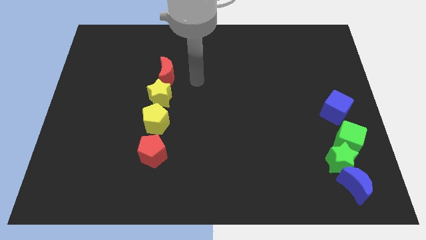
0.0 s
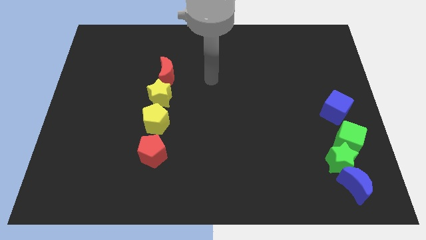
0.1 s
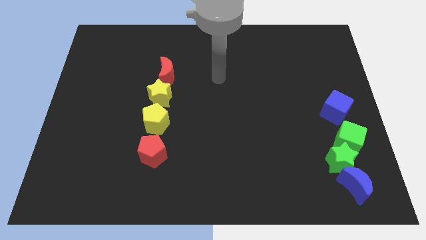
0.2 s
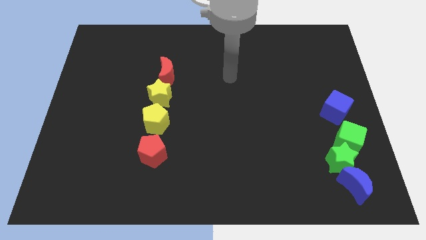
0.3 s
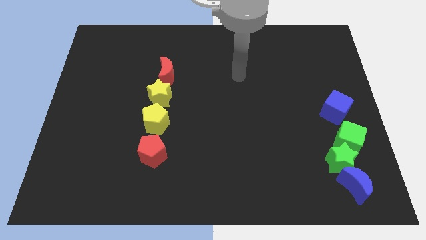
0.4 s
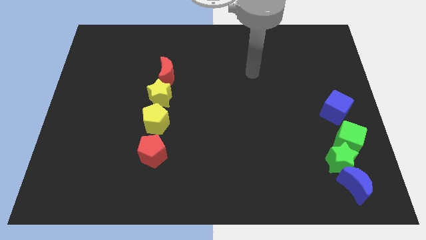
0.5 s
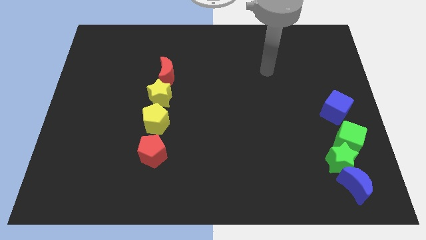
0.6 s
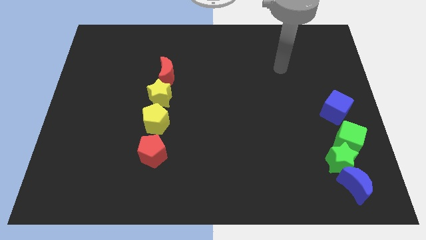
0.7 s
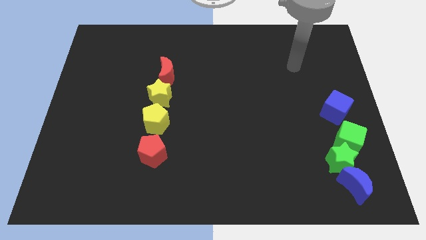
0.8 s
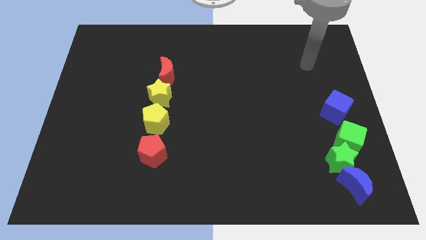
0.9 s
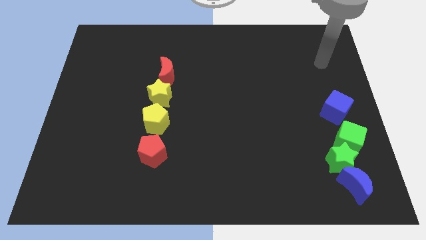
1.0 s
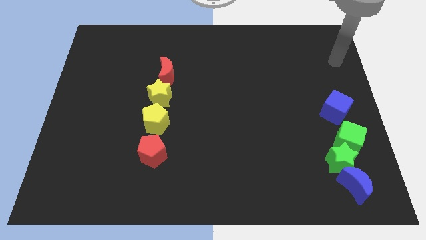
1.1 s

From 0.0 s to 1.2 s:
move your arm towards the right side of the board

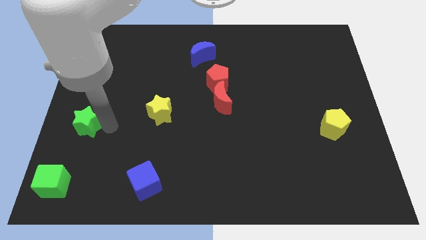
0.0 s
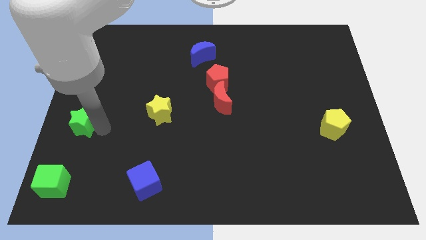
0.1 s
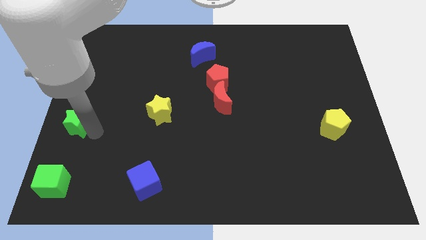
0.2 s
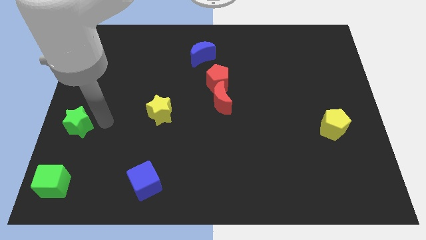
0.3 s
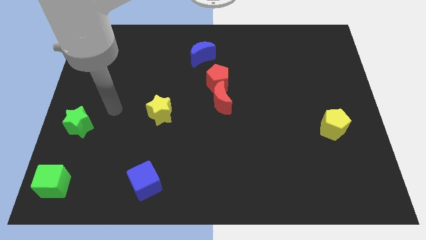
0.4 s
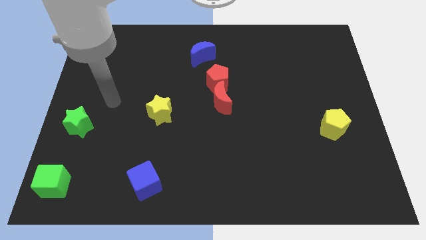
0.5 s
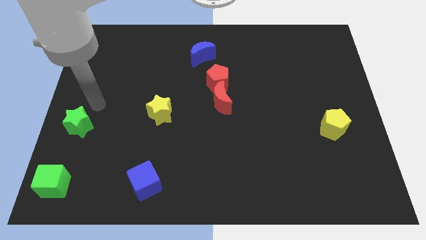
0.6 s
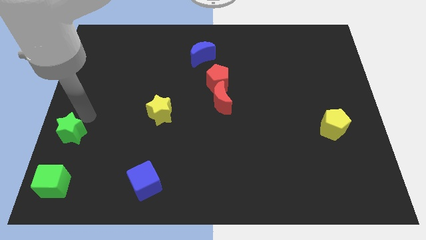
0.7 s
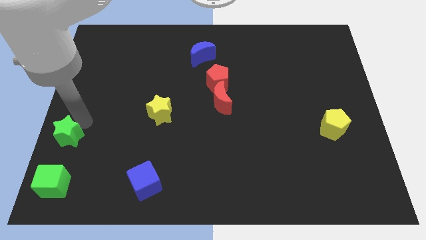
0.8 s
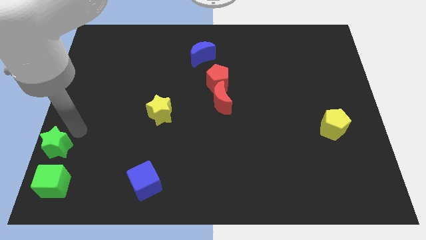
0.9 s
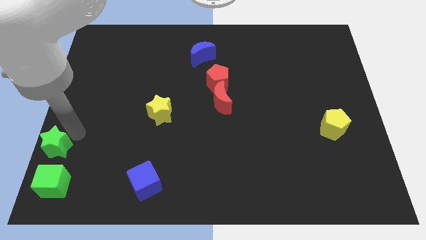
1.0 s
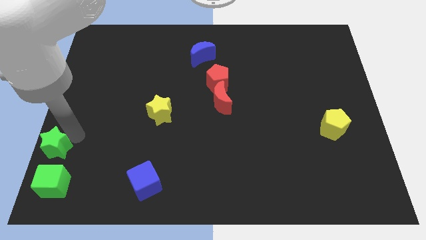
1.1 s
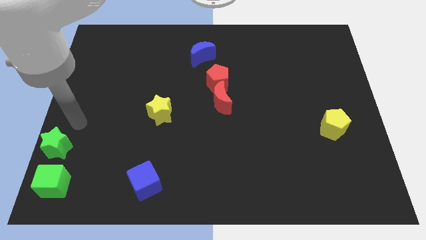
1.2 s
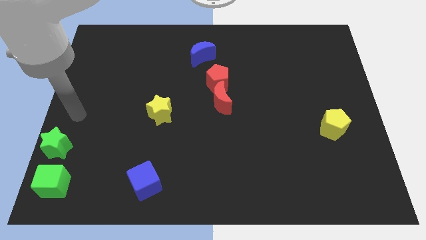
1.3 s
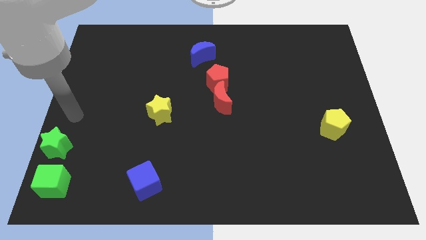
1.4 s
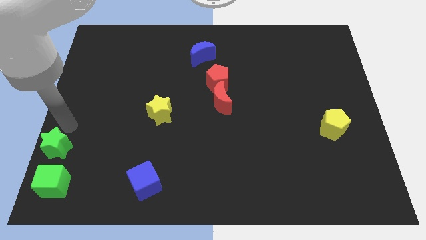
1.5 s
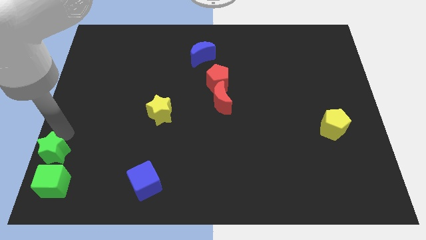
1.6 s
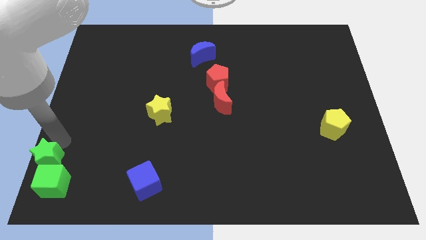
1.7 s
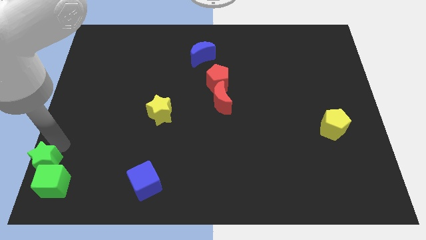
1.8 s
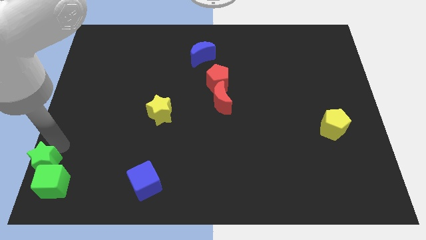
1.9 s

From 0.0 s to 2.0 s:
place the green star above the green cube

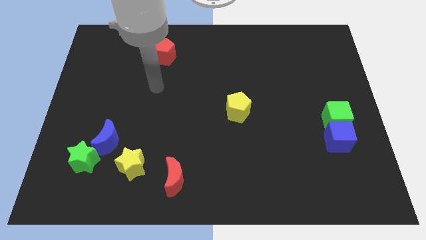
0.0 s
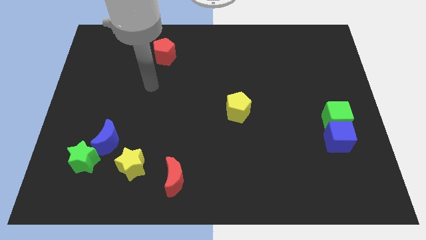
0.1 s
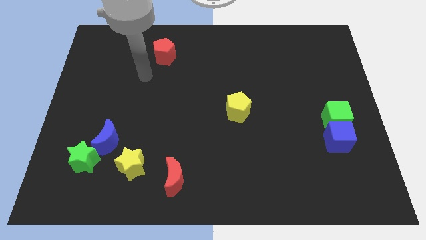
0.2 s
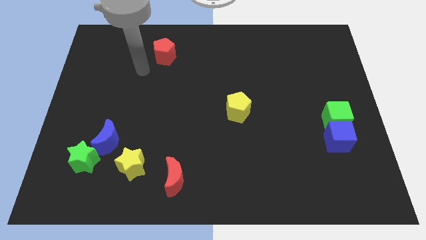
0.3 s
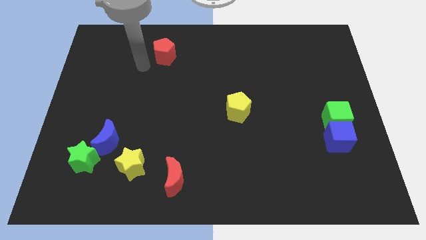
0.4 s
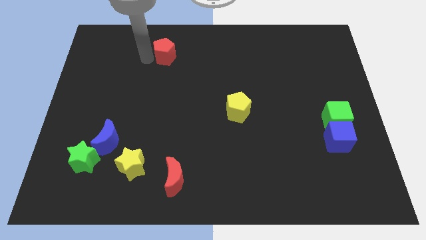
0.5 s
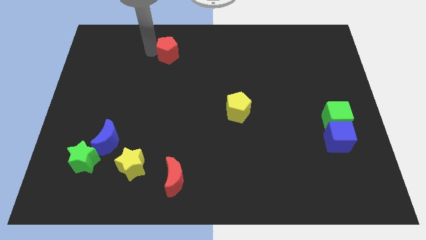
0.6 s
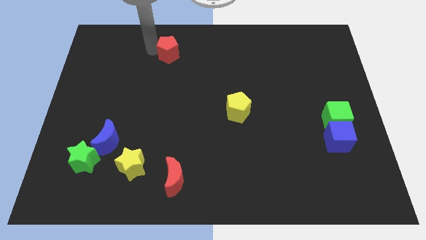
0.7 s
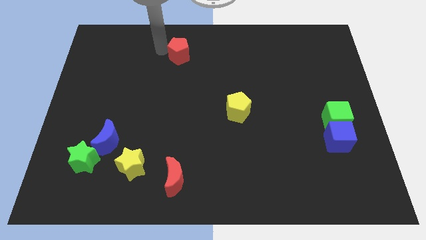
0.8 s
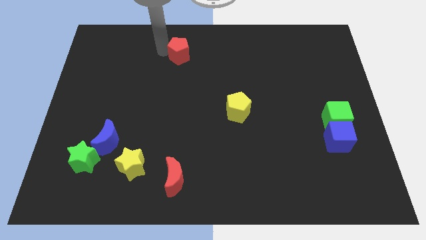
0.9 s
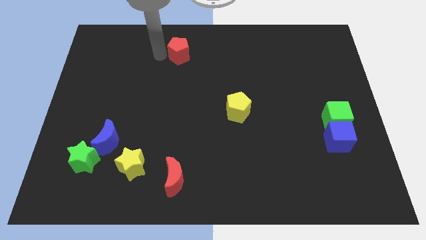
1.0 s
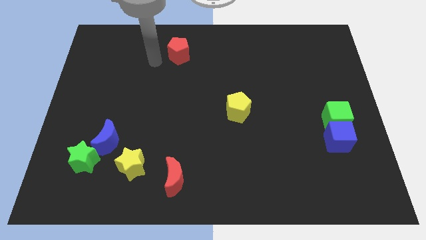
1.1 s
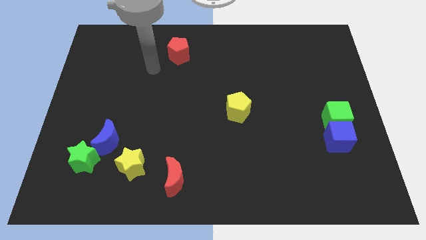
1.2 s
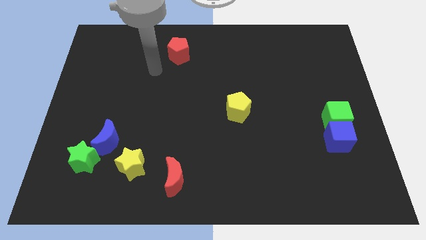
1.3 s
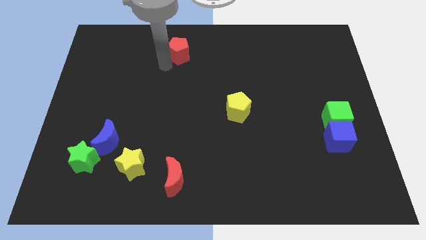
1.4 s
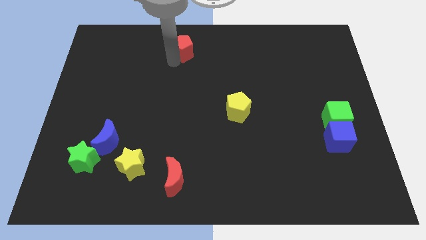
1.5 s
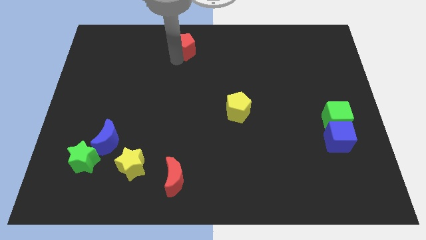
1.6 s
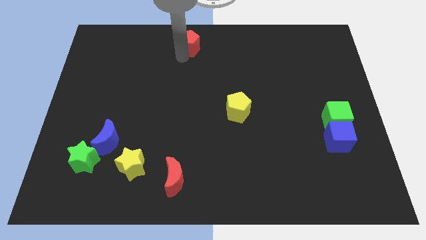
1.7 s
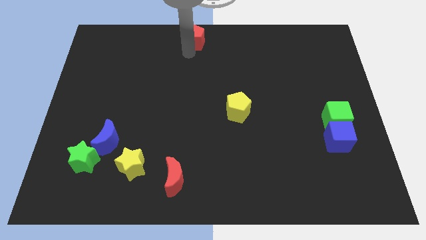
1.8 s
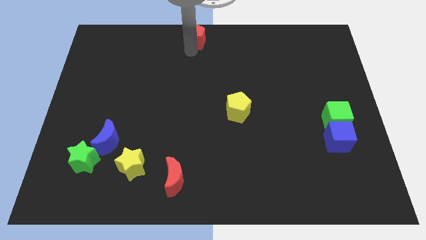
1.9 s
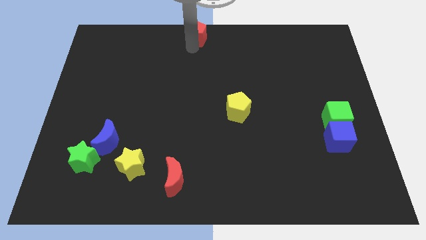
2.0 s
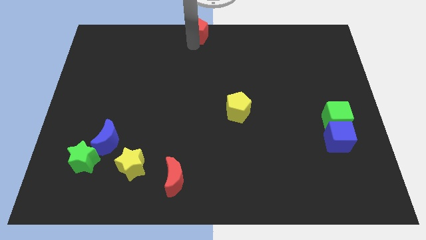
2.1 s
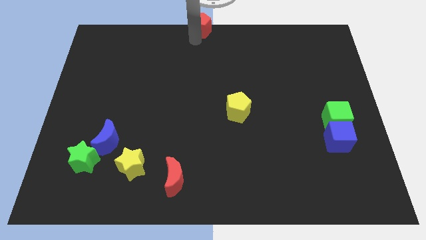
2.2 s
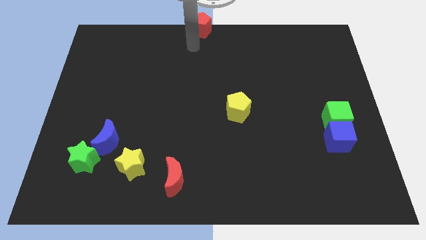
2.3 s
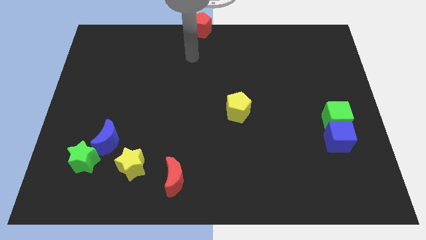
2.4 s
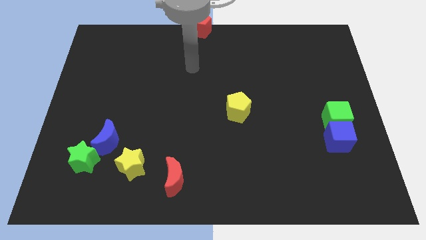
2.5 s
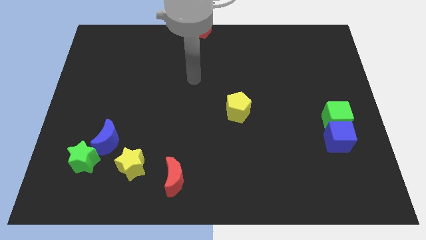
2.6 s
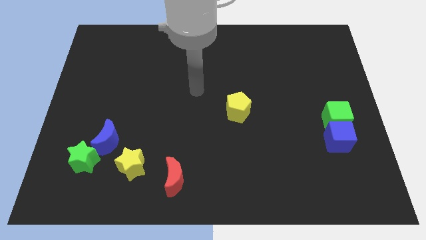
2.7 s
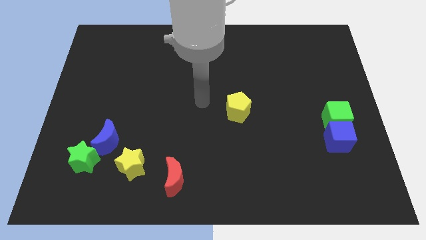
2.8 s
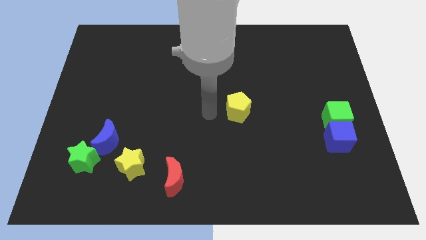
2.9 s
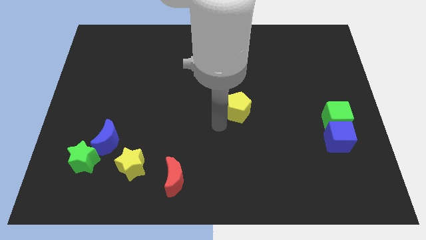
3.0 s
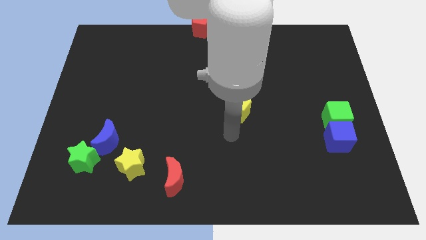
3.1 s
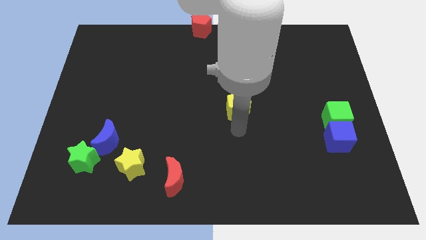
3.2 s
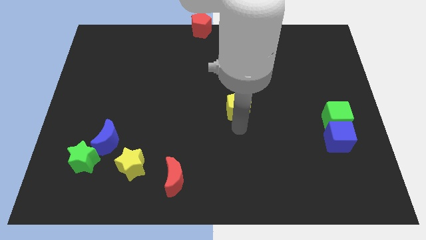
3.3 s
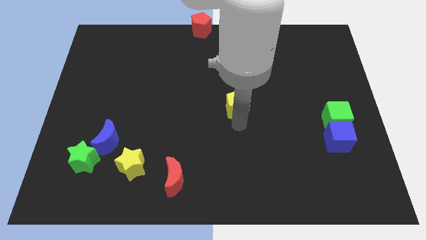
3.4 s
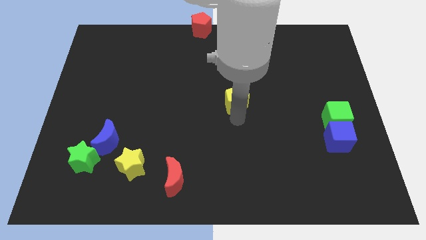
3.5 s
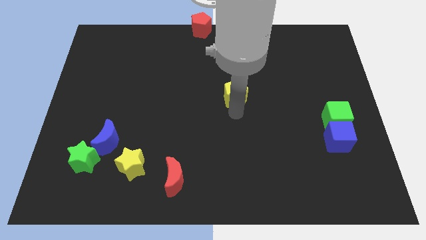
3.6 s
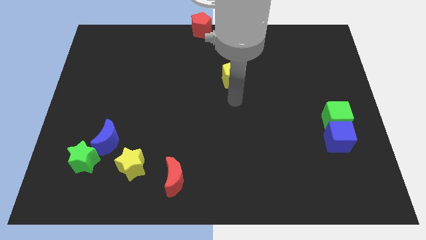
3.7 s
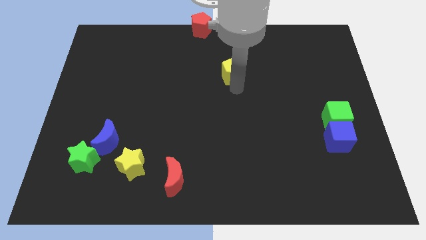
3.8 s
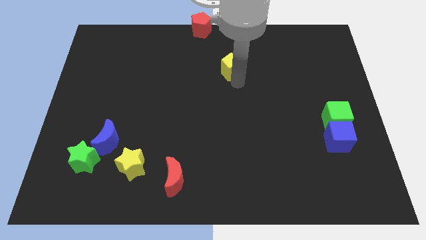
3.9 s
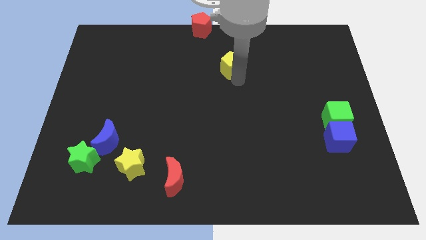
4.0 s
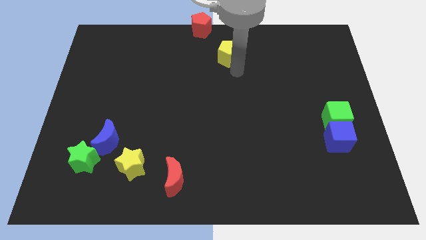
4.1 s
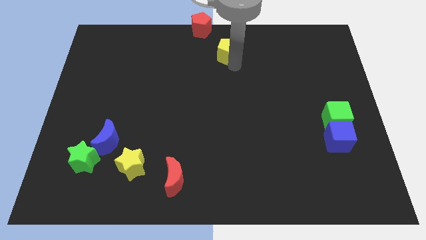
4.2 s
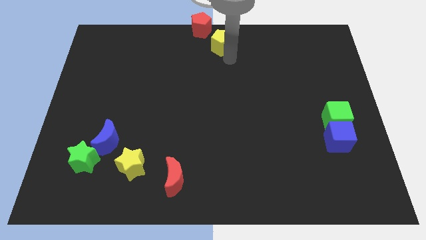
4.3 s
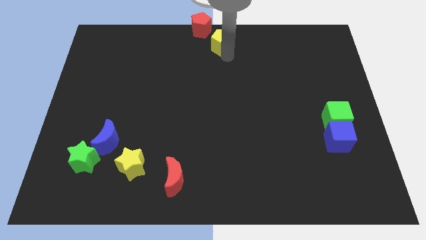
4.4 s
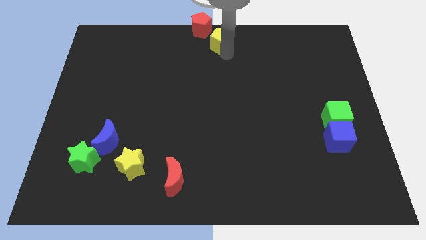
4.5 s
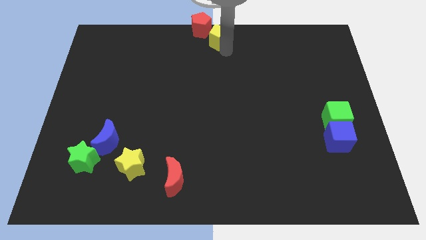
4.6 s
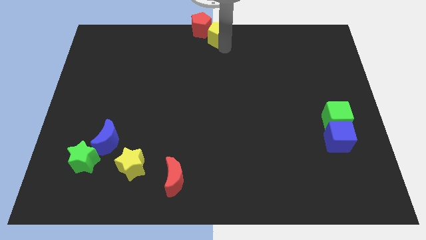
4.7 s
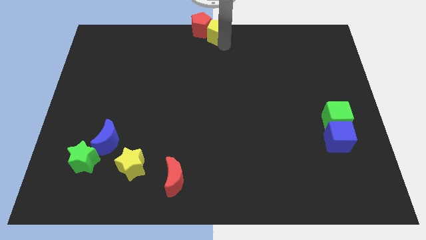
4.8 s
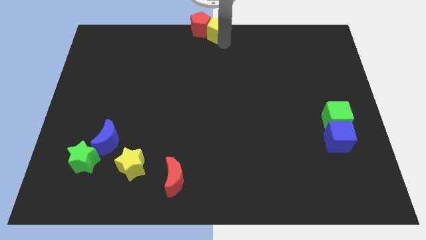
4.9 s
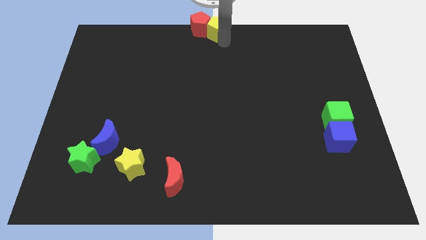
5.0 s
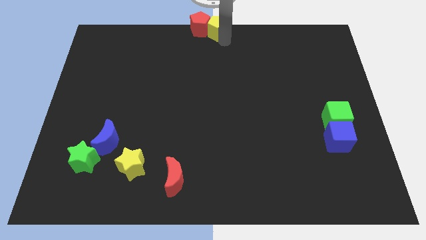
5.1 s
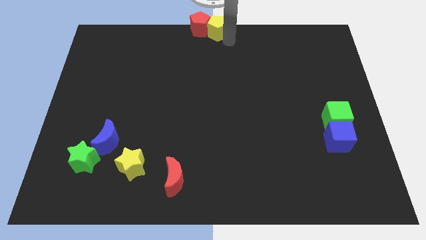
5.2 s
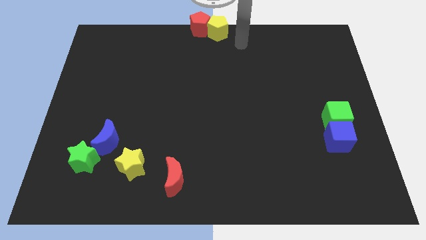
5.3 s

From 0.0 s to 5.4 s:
place the red and yellow pentagons at the top center of the board

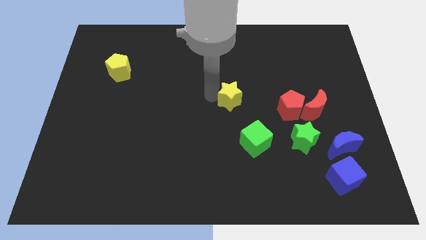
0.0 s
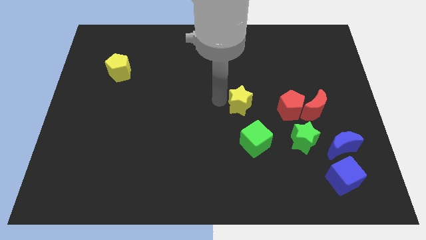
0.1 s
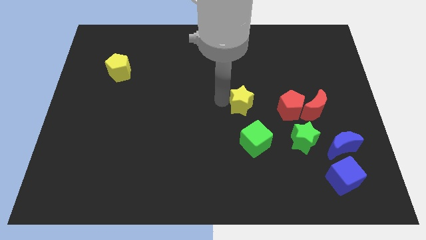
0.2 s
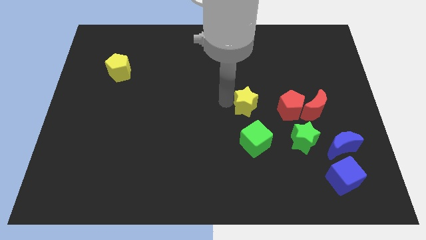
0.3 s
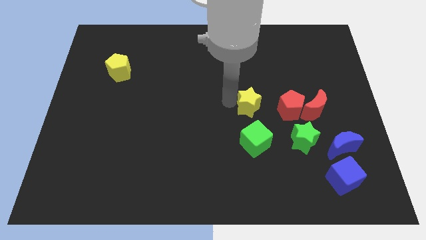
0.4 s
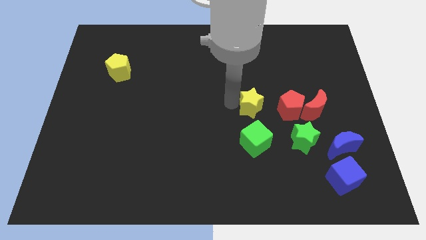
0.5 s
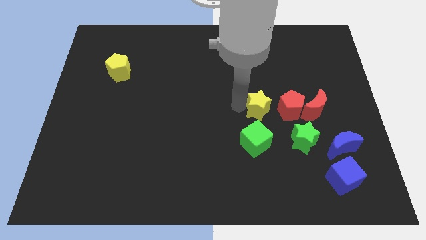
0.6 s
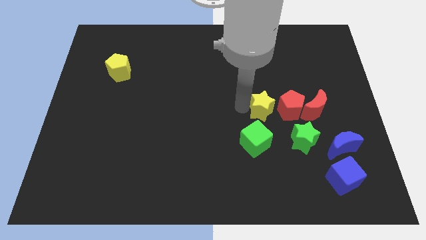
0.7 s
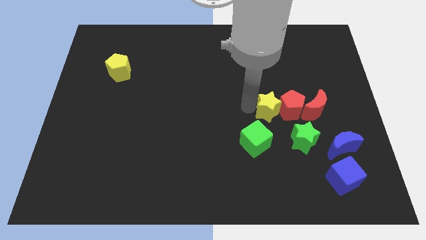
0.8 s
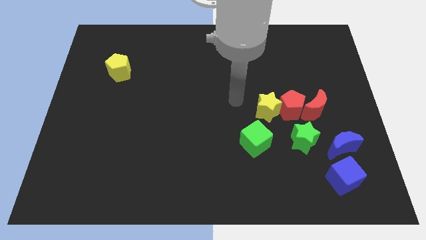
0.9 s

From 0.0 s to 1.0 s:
push the yellow star in to the red pentagon
